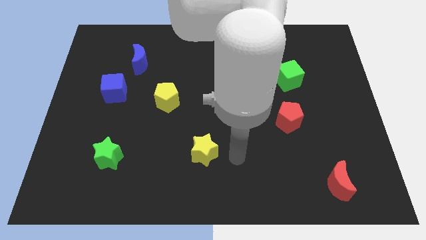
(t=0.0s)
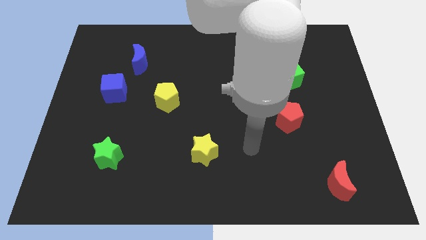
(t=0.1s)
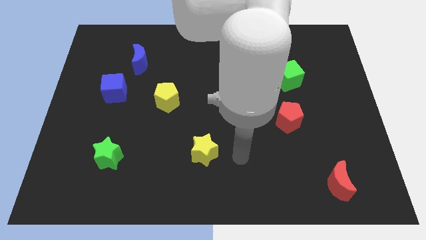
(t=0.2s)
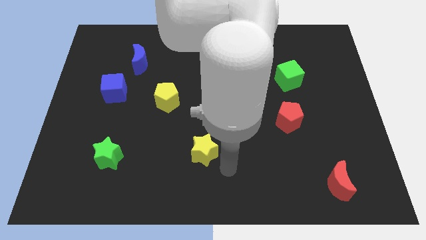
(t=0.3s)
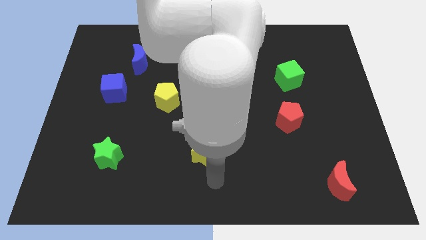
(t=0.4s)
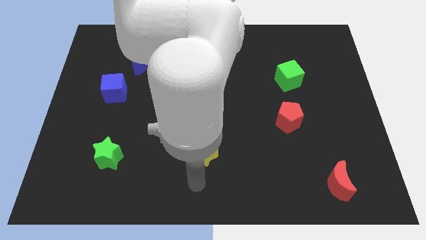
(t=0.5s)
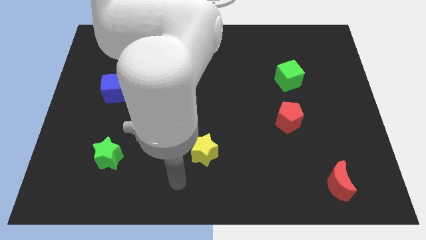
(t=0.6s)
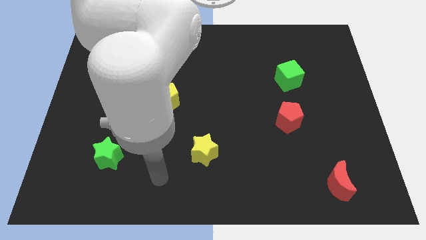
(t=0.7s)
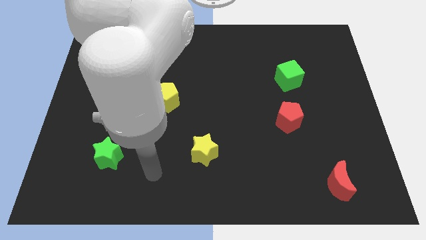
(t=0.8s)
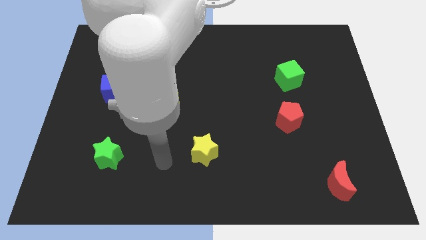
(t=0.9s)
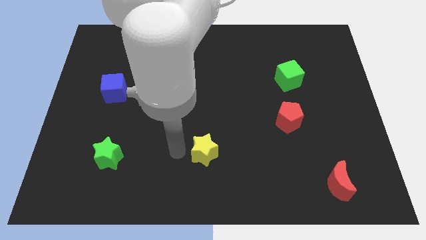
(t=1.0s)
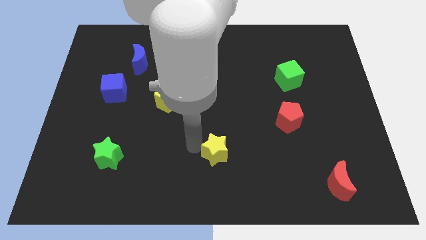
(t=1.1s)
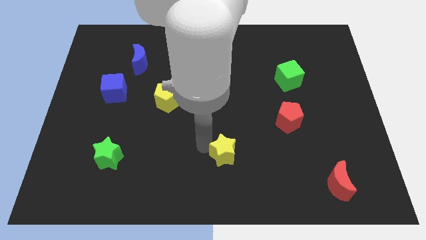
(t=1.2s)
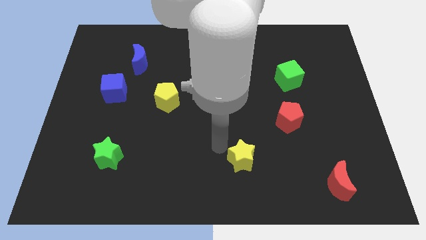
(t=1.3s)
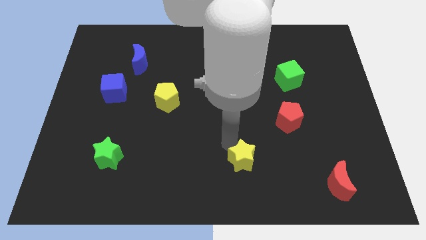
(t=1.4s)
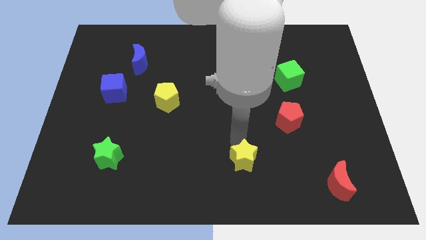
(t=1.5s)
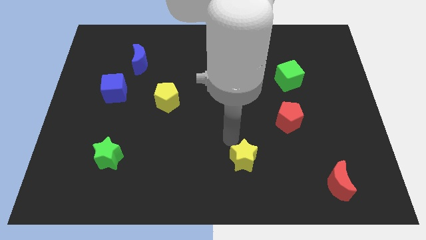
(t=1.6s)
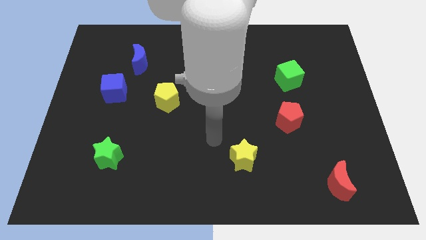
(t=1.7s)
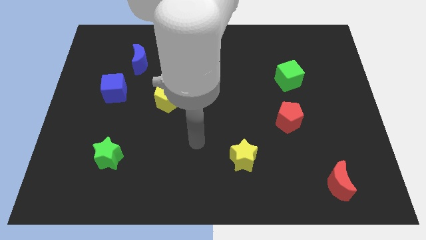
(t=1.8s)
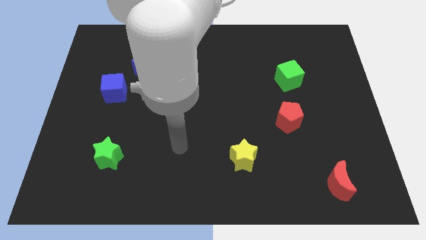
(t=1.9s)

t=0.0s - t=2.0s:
push the yellow star diagonal below red pentagon

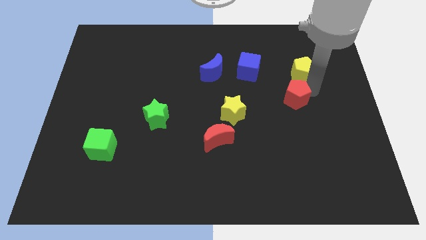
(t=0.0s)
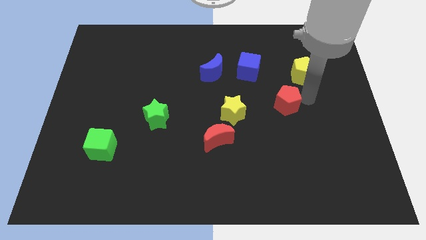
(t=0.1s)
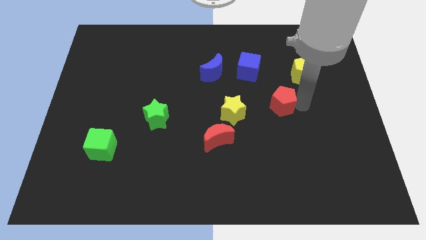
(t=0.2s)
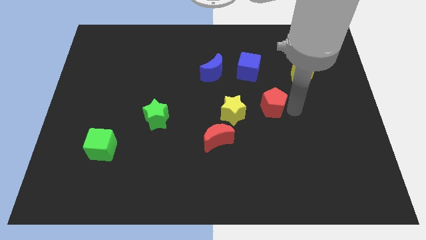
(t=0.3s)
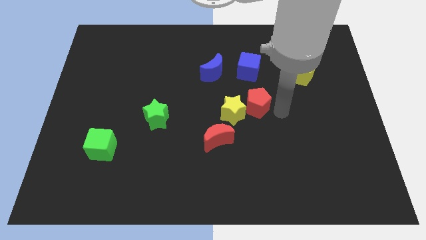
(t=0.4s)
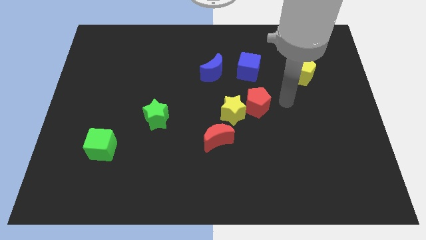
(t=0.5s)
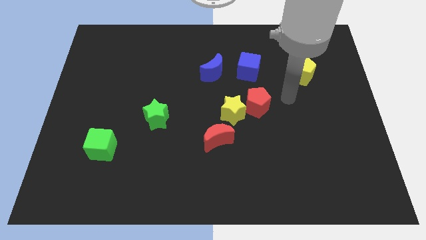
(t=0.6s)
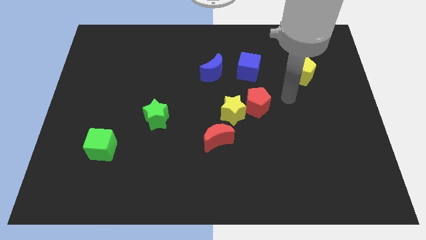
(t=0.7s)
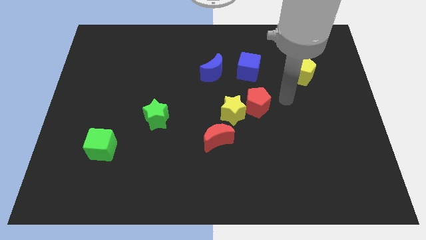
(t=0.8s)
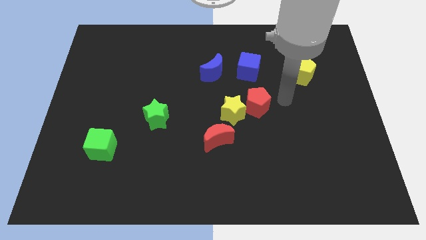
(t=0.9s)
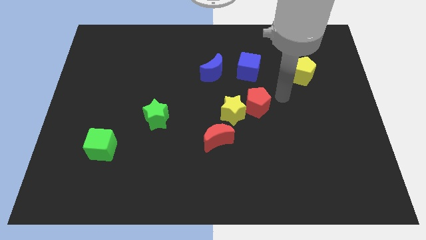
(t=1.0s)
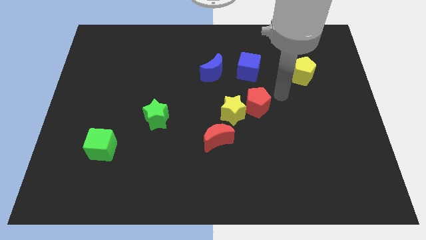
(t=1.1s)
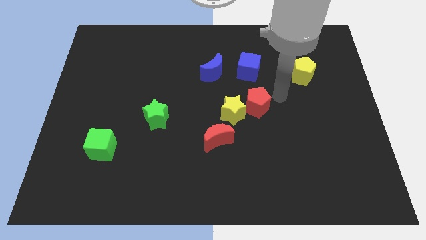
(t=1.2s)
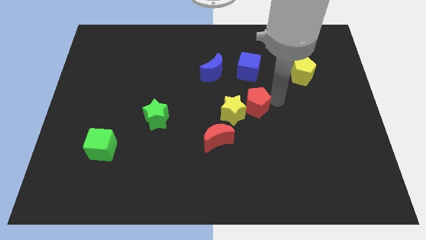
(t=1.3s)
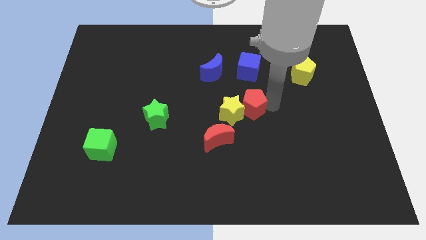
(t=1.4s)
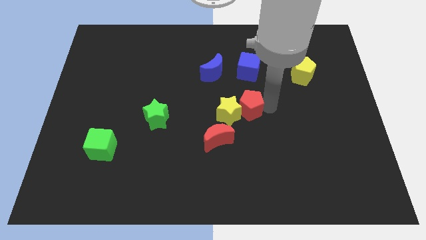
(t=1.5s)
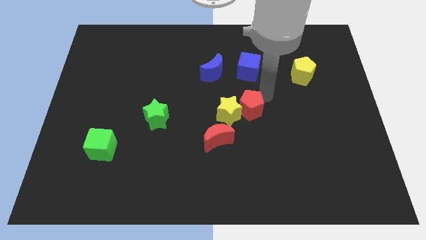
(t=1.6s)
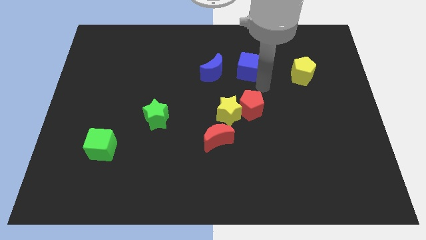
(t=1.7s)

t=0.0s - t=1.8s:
push the red pentagon into the yellow star

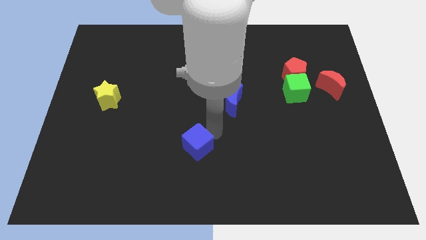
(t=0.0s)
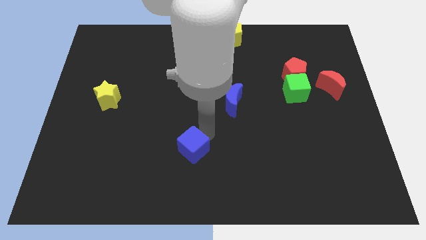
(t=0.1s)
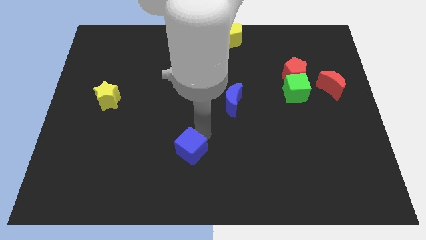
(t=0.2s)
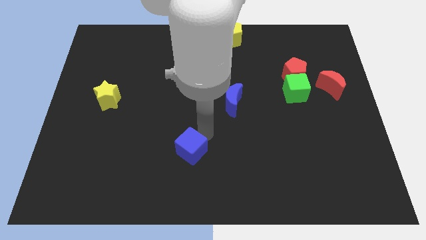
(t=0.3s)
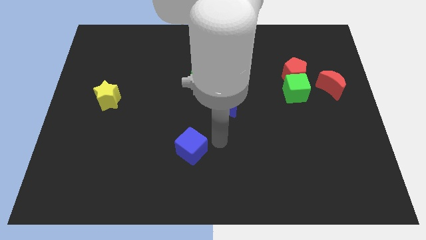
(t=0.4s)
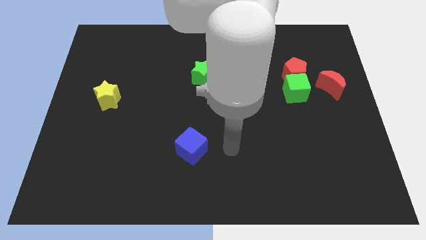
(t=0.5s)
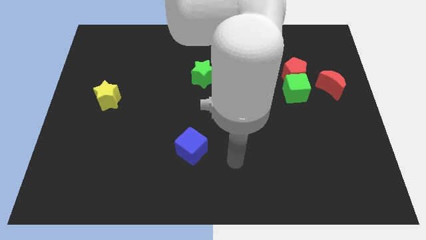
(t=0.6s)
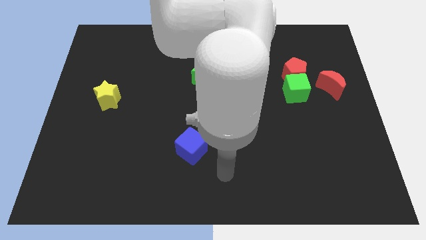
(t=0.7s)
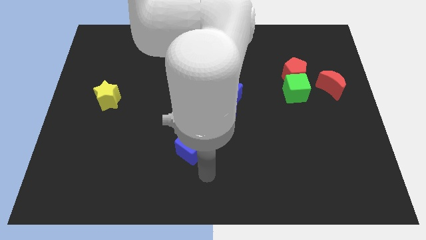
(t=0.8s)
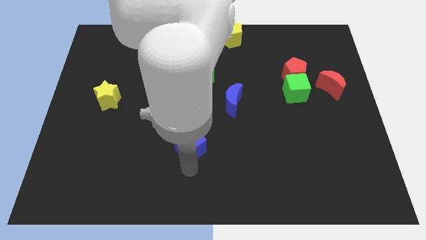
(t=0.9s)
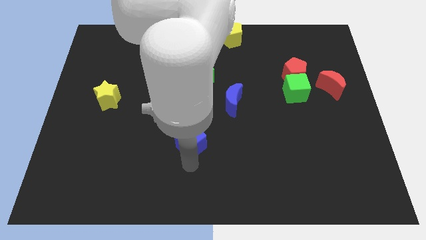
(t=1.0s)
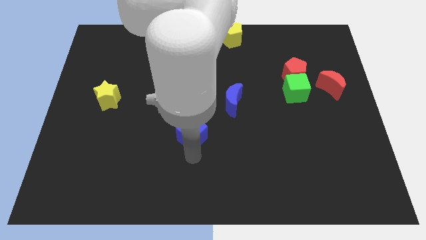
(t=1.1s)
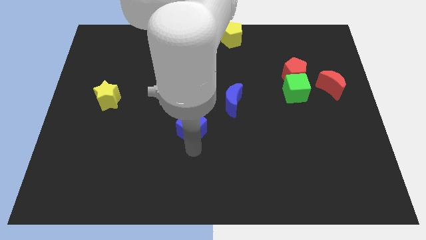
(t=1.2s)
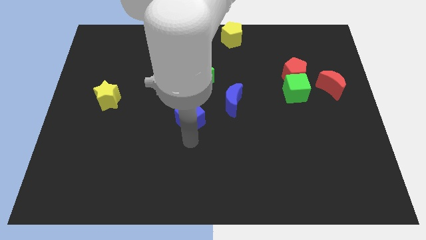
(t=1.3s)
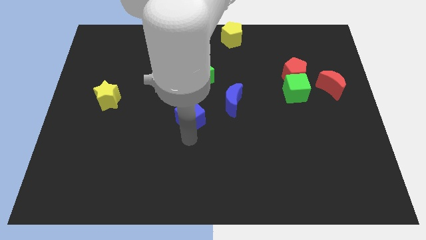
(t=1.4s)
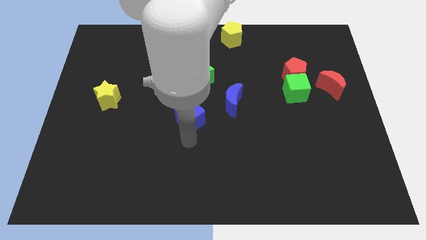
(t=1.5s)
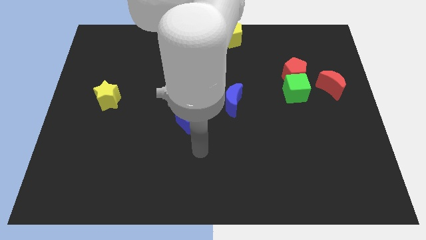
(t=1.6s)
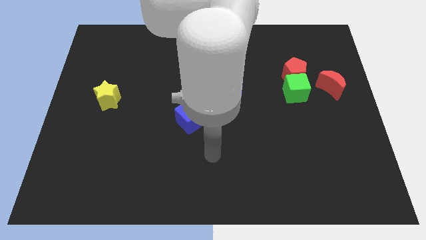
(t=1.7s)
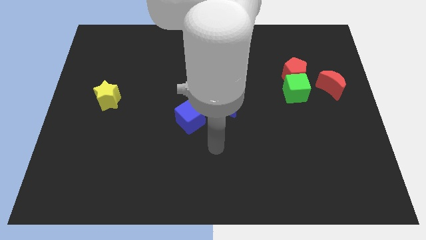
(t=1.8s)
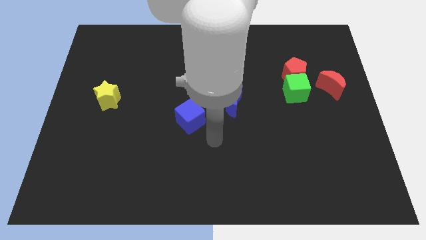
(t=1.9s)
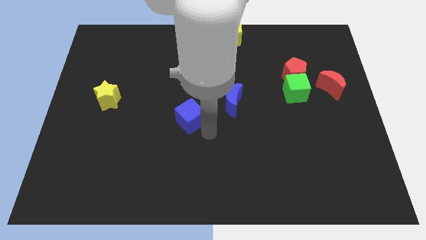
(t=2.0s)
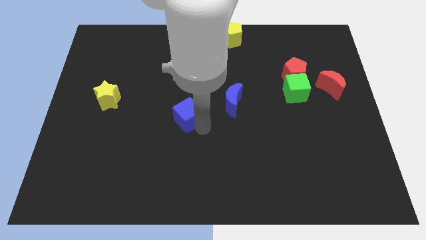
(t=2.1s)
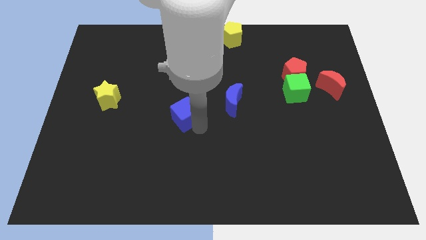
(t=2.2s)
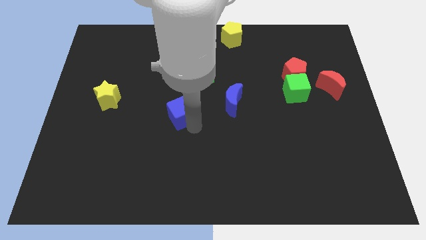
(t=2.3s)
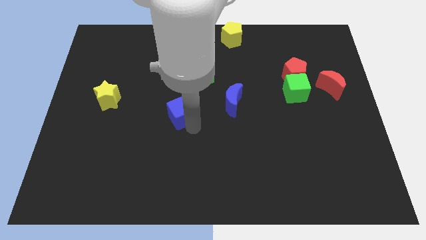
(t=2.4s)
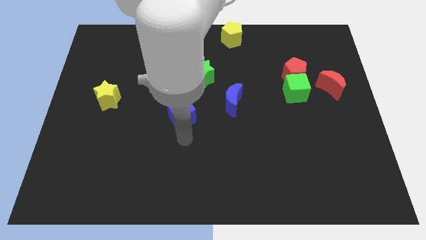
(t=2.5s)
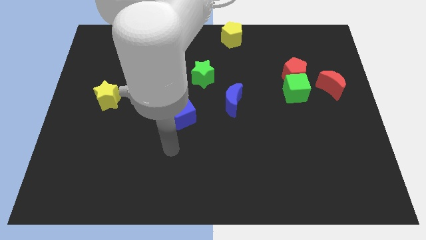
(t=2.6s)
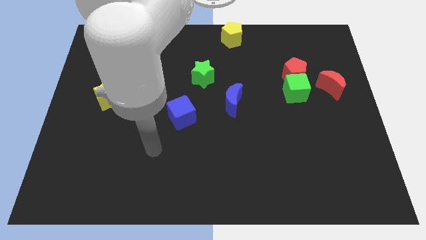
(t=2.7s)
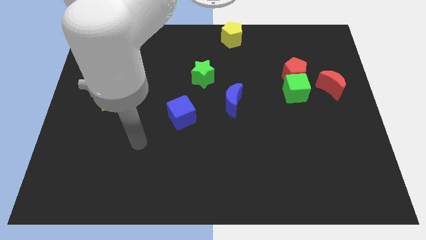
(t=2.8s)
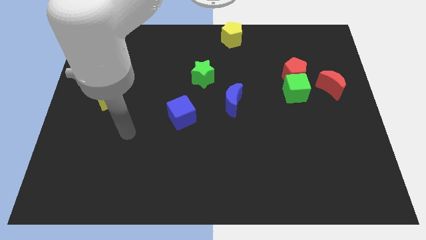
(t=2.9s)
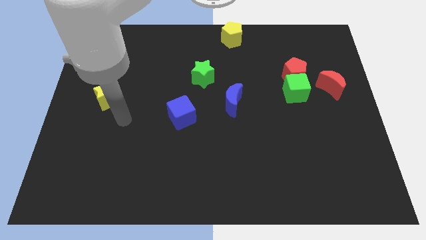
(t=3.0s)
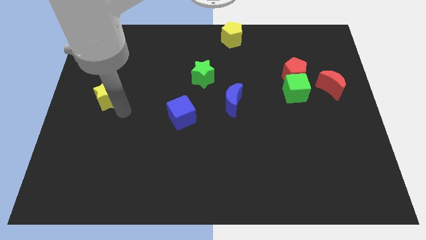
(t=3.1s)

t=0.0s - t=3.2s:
place the blue cube diagonally bottom left to the green star

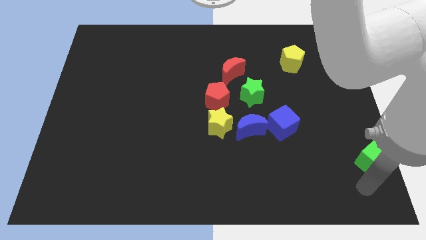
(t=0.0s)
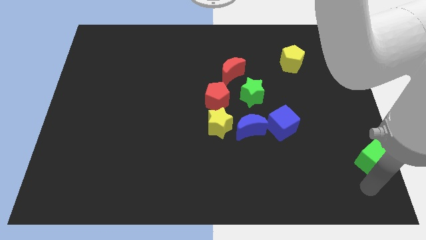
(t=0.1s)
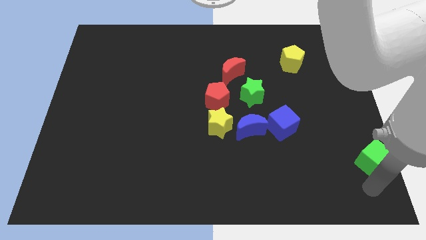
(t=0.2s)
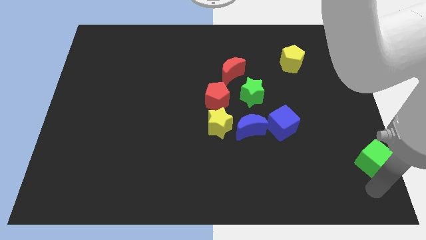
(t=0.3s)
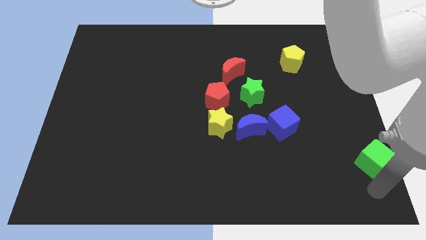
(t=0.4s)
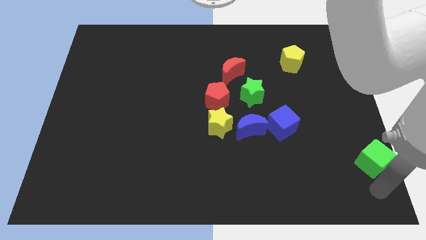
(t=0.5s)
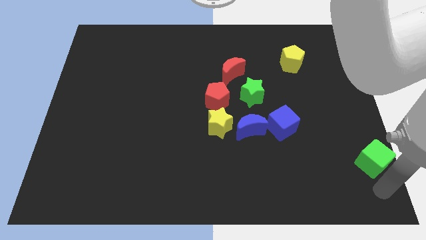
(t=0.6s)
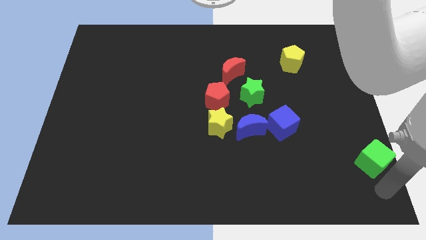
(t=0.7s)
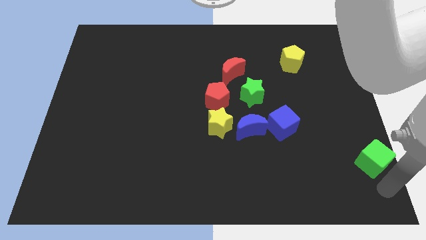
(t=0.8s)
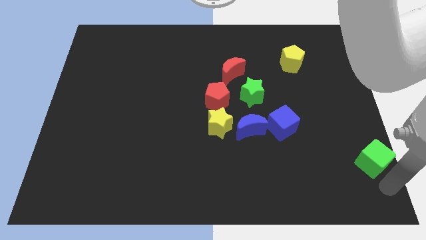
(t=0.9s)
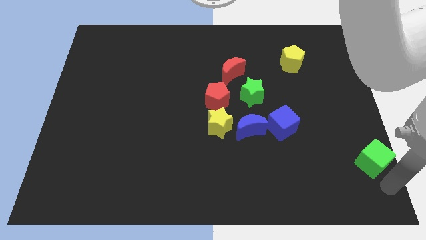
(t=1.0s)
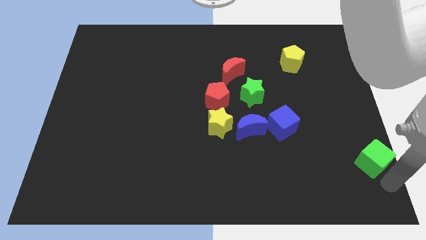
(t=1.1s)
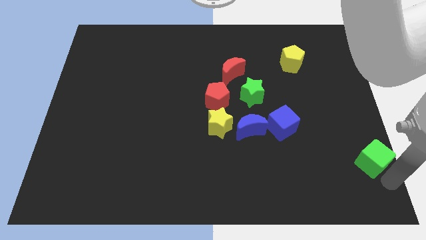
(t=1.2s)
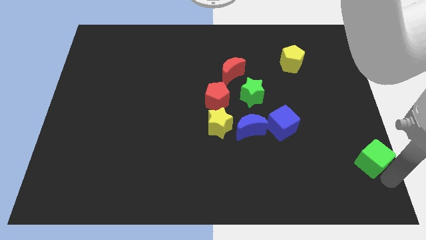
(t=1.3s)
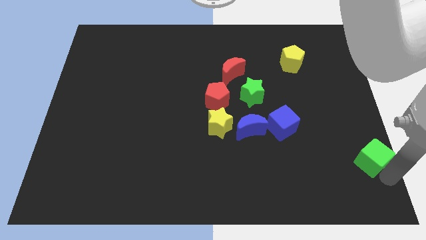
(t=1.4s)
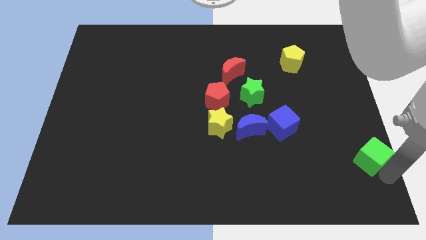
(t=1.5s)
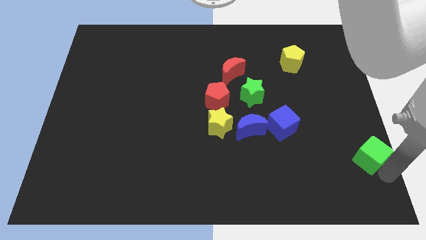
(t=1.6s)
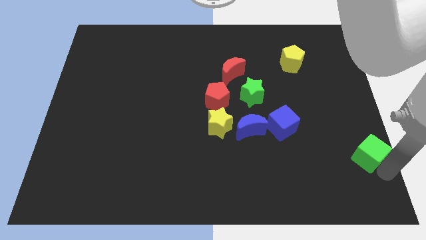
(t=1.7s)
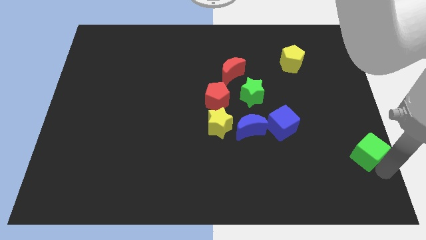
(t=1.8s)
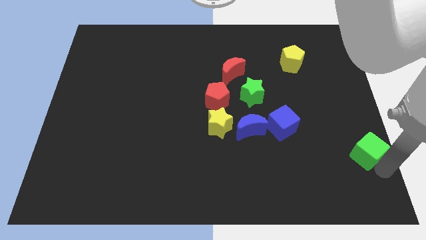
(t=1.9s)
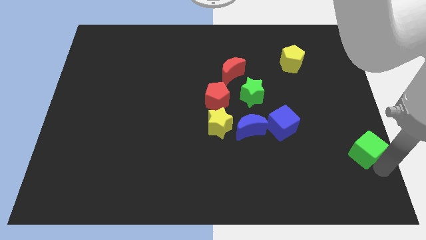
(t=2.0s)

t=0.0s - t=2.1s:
move the green cube slightly to the top side of the board
